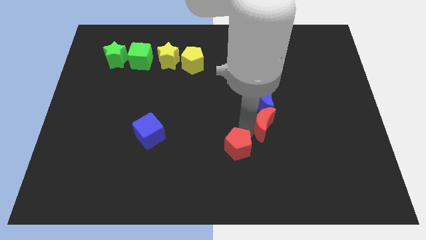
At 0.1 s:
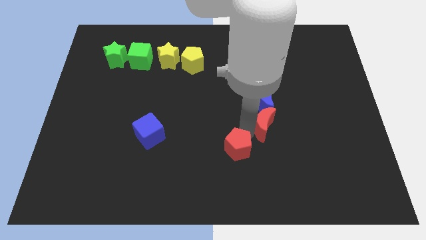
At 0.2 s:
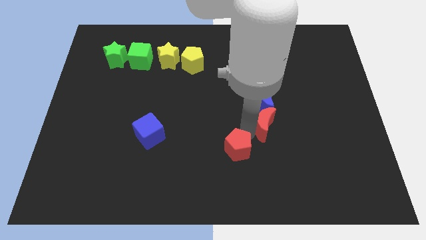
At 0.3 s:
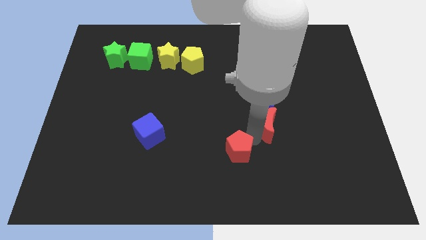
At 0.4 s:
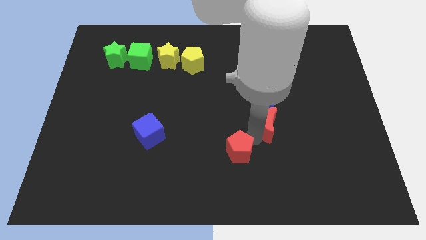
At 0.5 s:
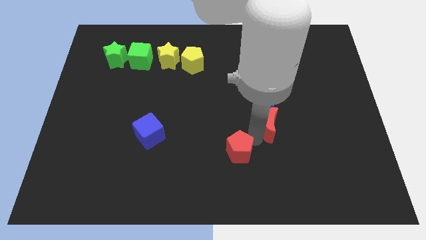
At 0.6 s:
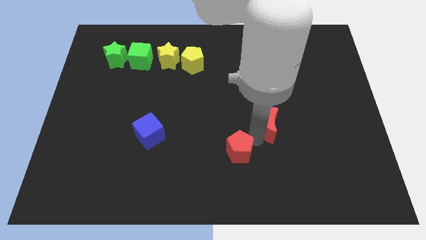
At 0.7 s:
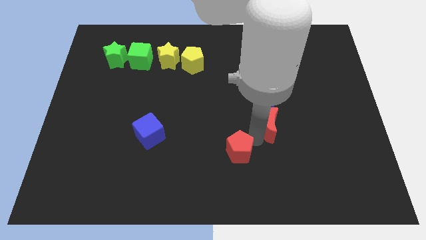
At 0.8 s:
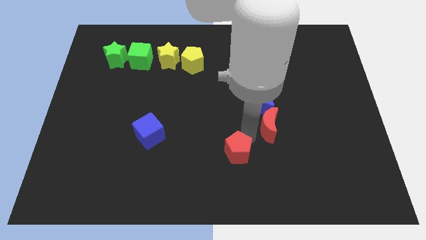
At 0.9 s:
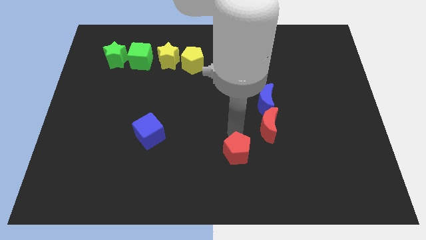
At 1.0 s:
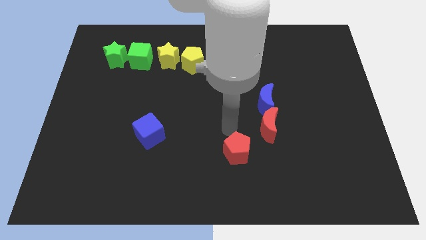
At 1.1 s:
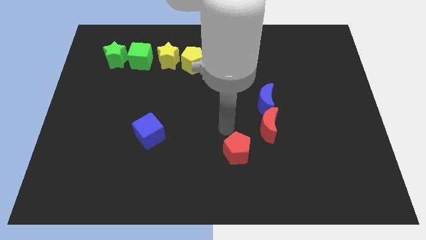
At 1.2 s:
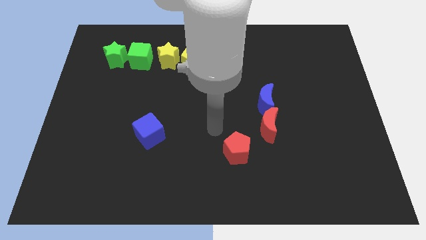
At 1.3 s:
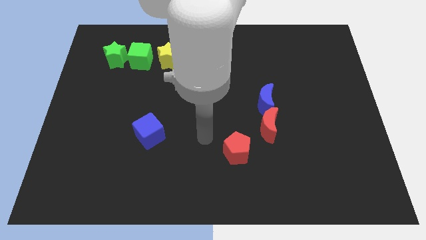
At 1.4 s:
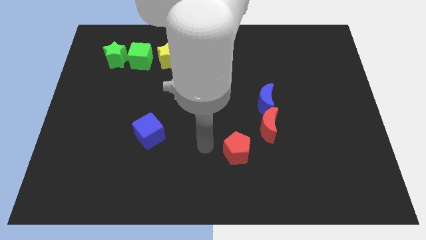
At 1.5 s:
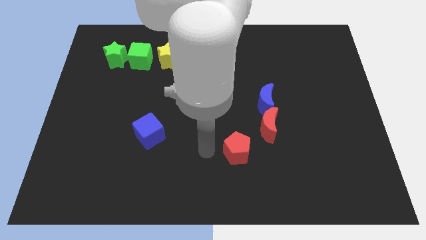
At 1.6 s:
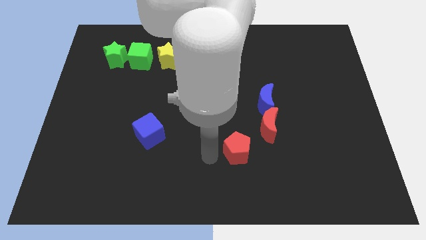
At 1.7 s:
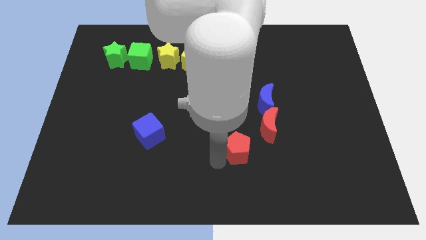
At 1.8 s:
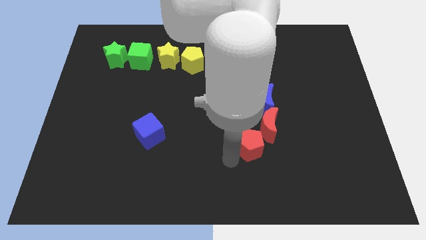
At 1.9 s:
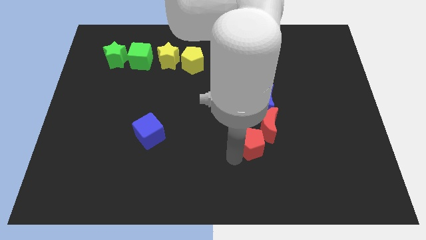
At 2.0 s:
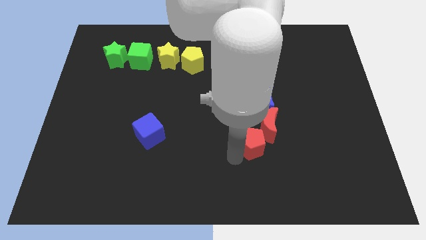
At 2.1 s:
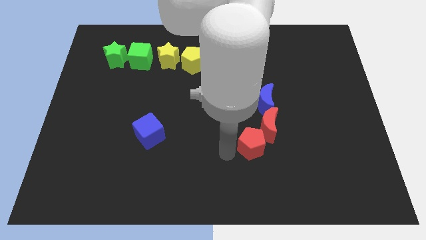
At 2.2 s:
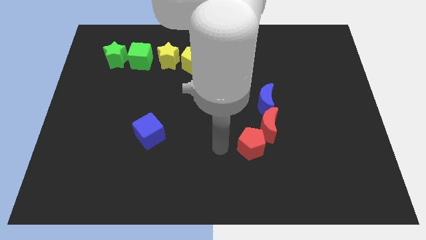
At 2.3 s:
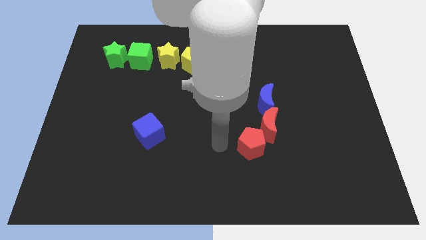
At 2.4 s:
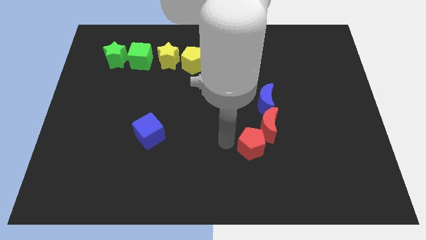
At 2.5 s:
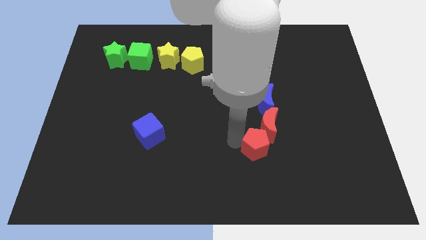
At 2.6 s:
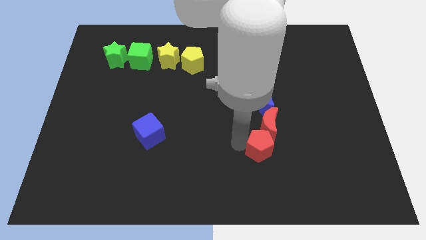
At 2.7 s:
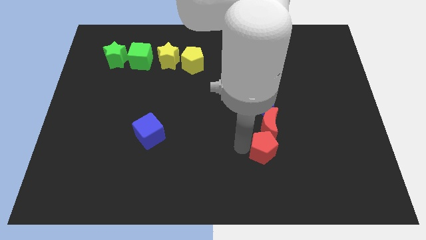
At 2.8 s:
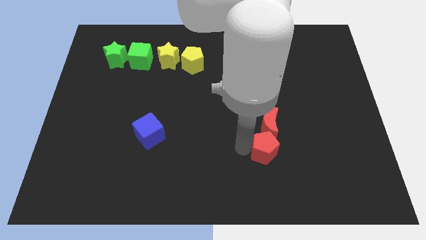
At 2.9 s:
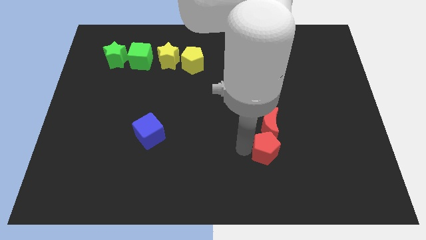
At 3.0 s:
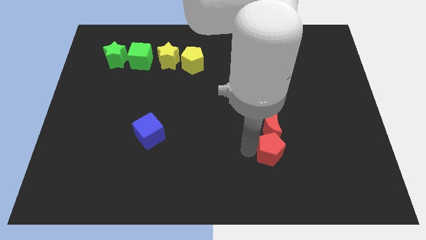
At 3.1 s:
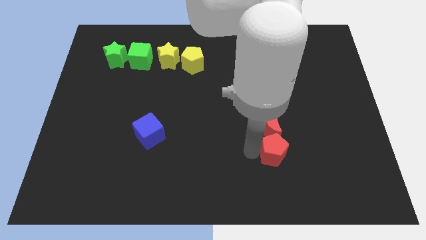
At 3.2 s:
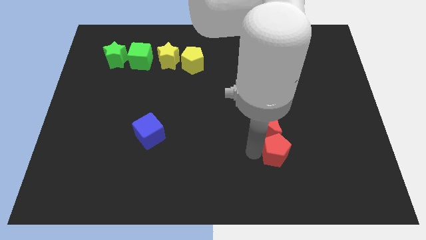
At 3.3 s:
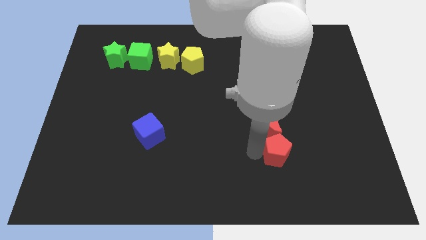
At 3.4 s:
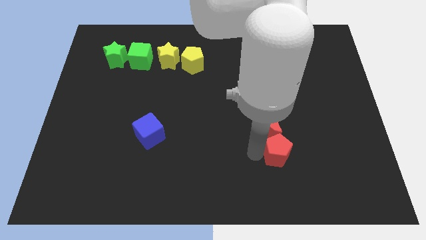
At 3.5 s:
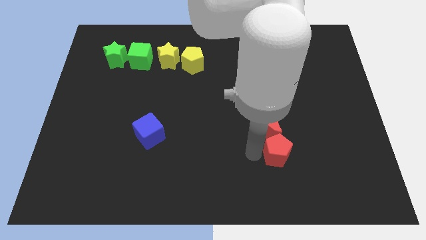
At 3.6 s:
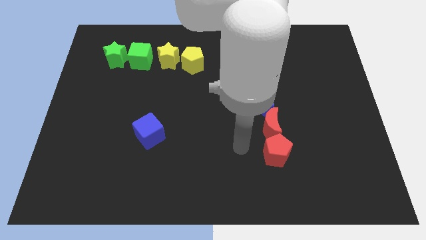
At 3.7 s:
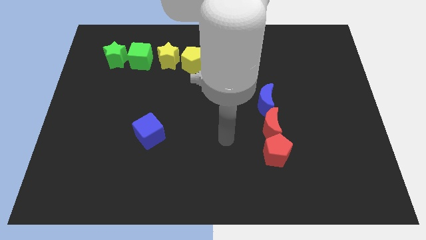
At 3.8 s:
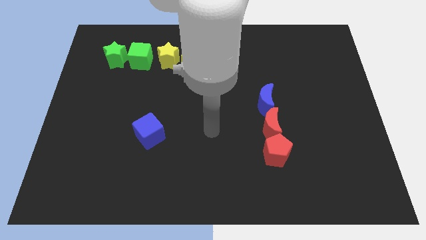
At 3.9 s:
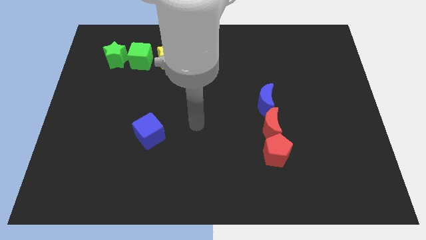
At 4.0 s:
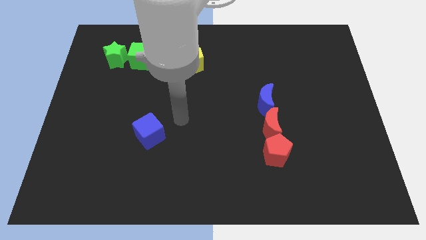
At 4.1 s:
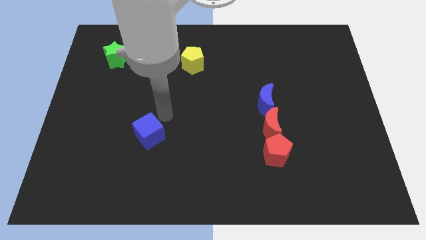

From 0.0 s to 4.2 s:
place the red pentagon below the red crescent

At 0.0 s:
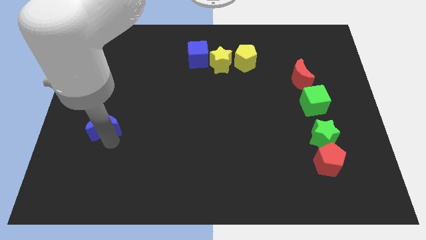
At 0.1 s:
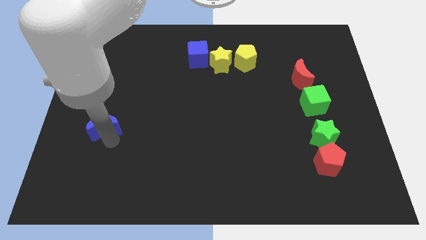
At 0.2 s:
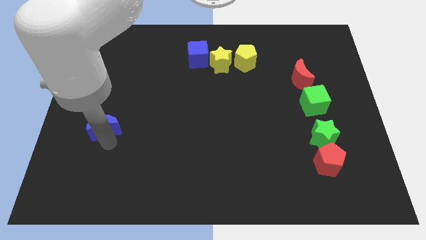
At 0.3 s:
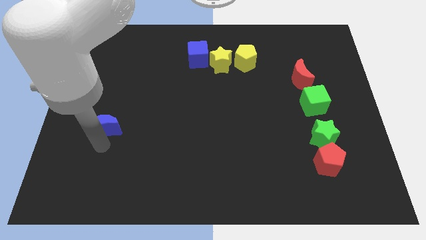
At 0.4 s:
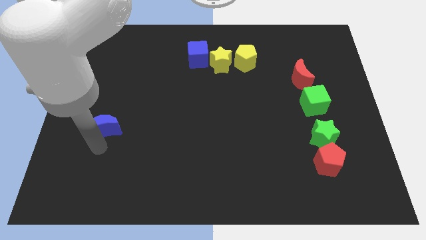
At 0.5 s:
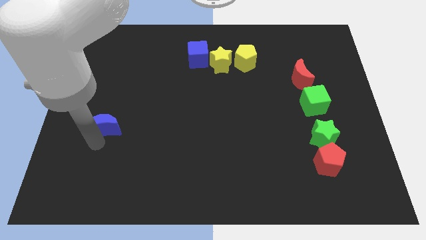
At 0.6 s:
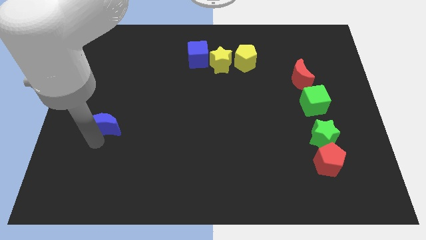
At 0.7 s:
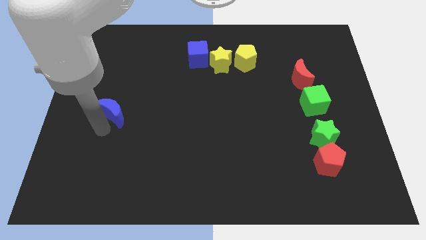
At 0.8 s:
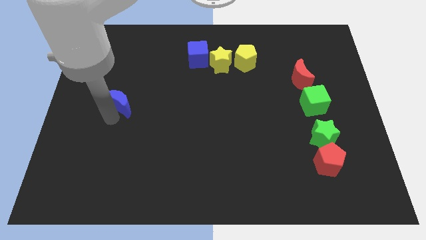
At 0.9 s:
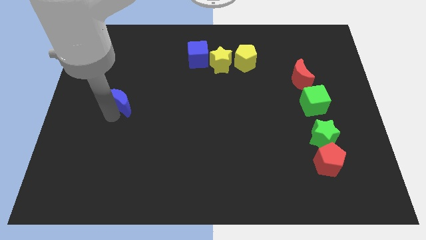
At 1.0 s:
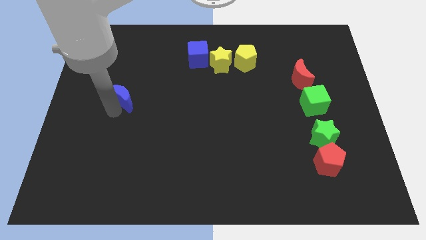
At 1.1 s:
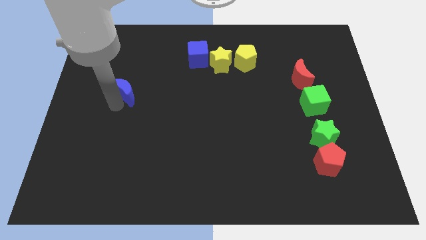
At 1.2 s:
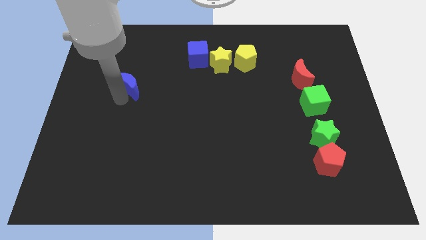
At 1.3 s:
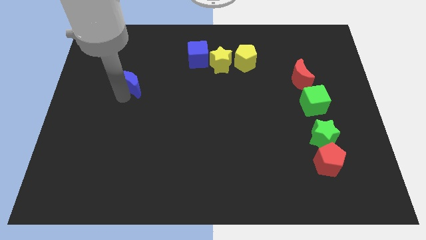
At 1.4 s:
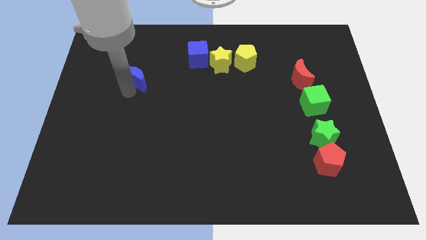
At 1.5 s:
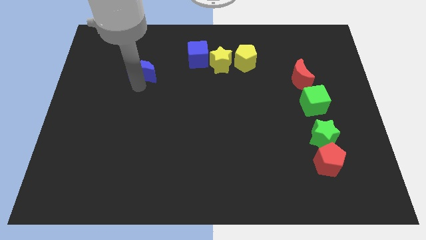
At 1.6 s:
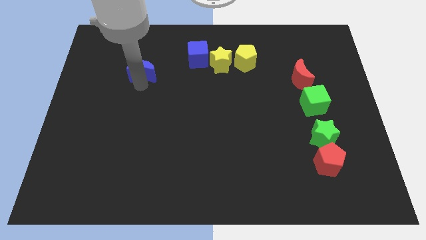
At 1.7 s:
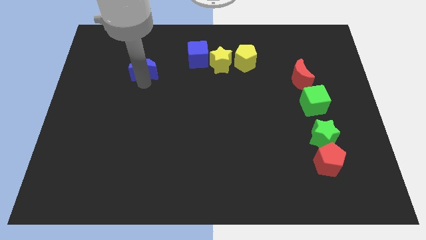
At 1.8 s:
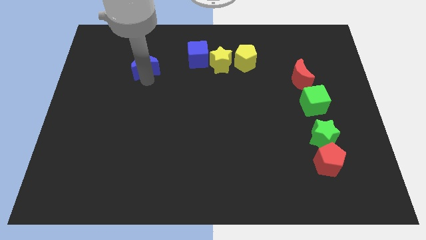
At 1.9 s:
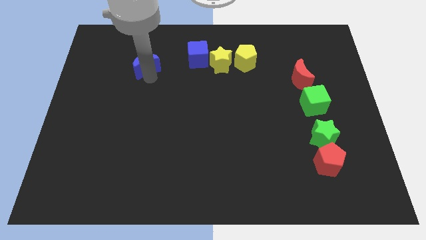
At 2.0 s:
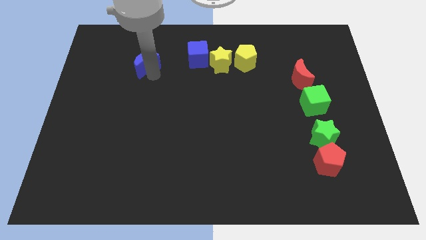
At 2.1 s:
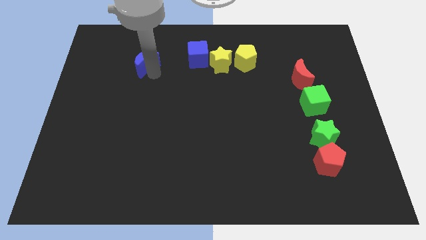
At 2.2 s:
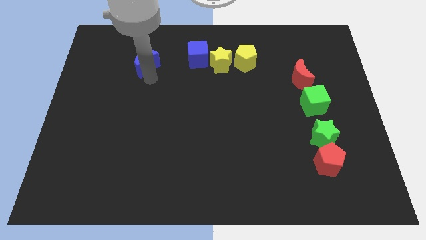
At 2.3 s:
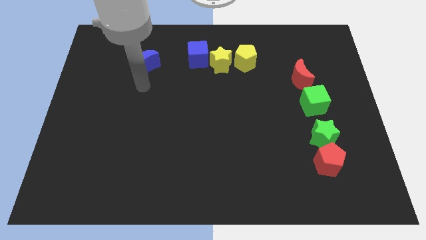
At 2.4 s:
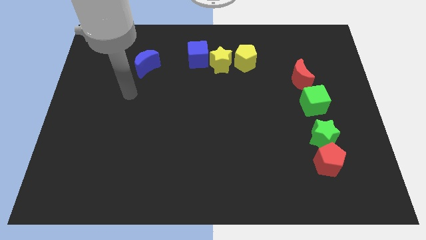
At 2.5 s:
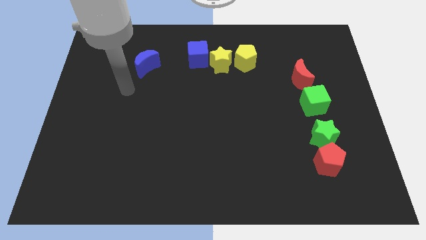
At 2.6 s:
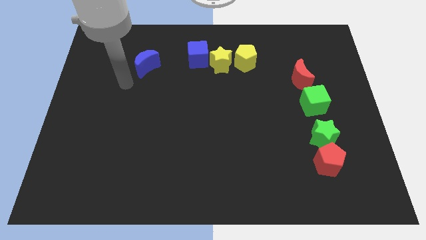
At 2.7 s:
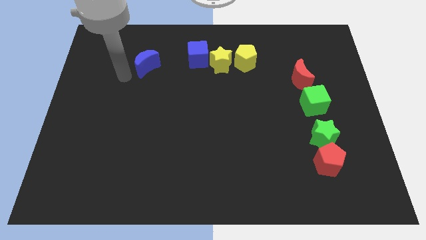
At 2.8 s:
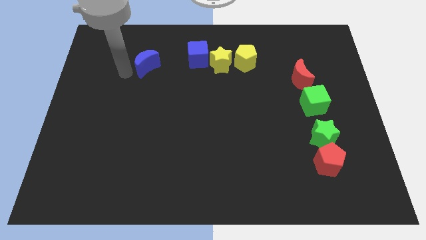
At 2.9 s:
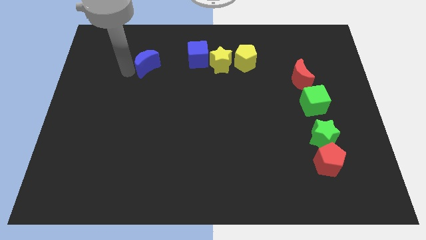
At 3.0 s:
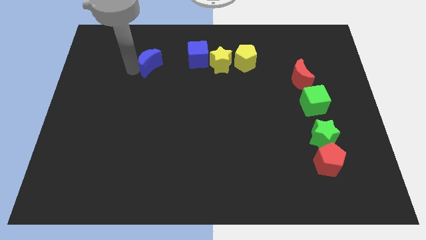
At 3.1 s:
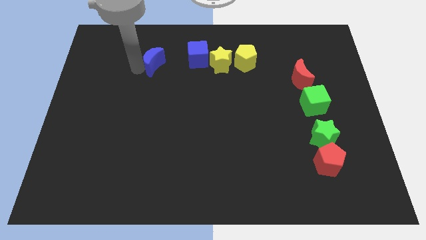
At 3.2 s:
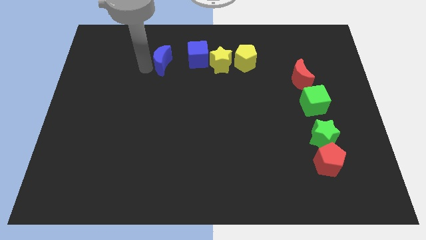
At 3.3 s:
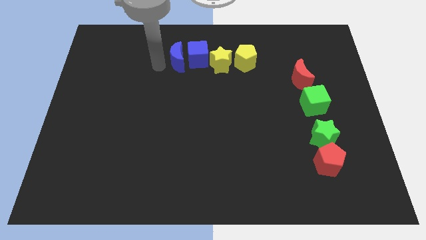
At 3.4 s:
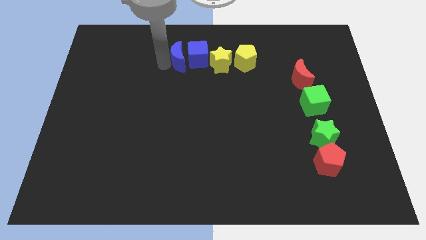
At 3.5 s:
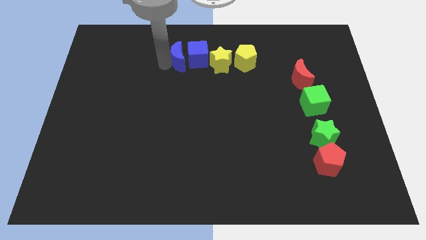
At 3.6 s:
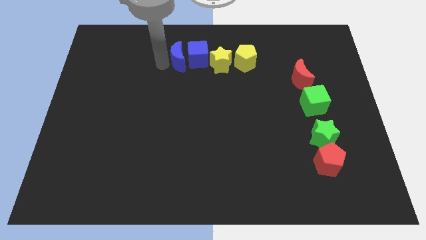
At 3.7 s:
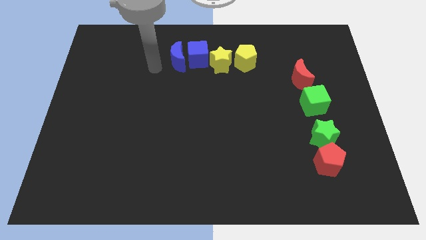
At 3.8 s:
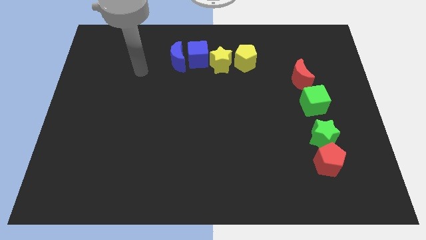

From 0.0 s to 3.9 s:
push the blue crescent to the left of the blue cube

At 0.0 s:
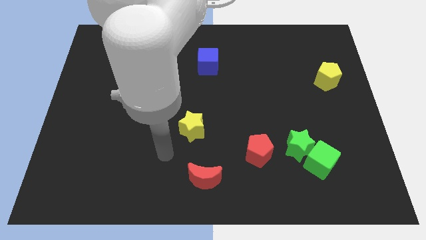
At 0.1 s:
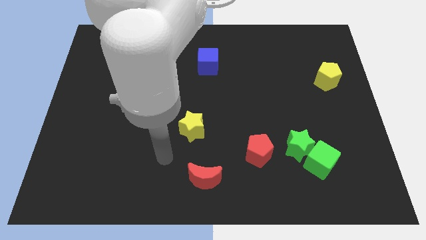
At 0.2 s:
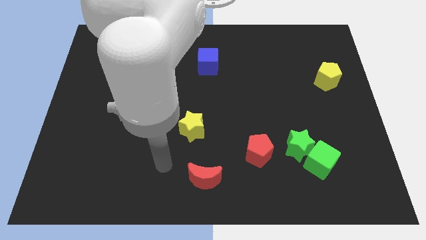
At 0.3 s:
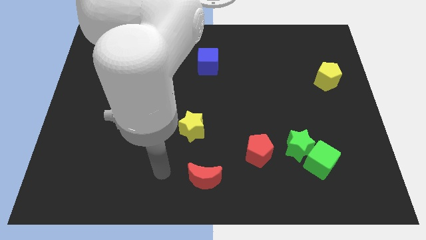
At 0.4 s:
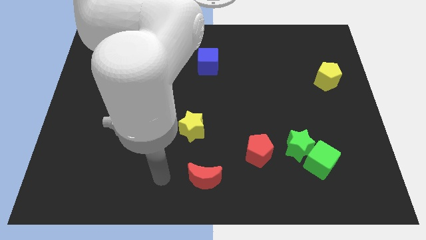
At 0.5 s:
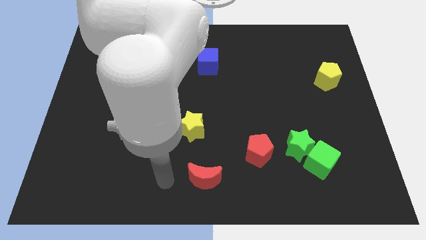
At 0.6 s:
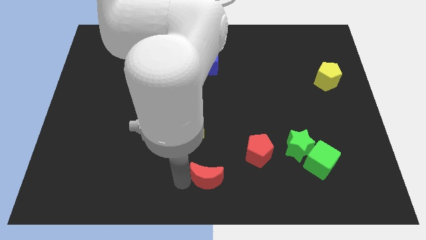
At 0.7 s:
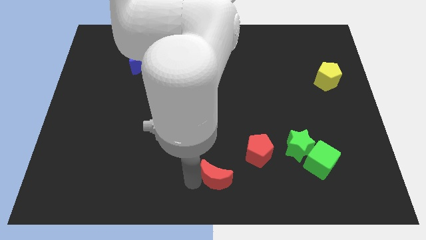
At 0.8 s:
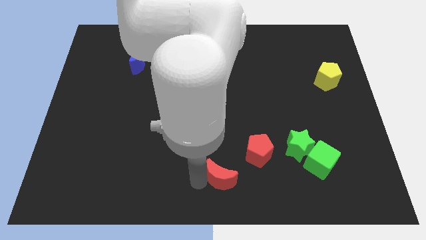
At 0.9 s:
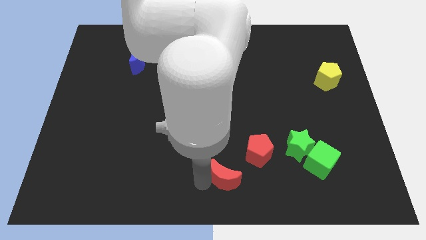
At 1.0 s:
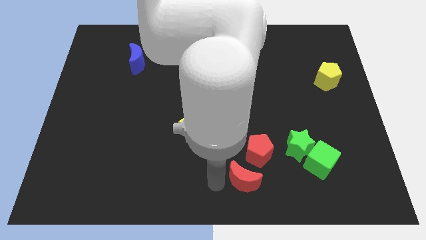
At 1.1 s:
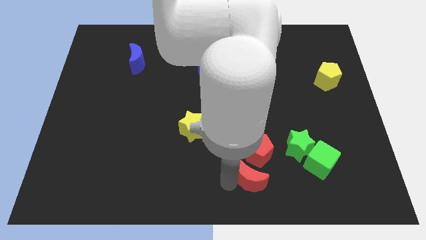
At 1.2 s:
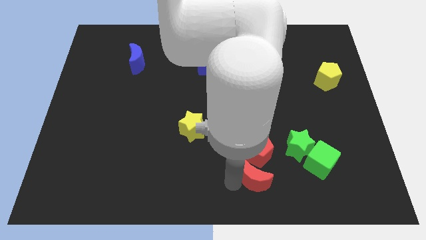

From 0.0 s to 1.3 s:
slide the red moon to the bottom of the red pentagon
